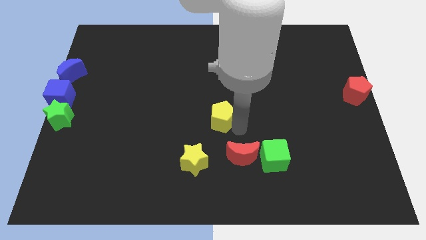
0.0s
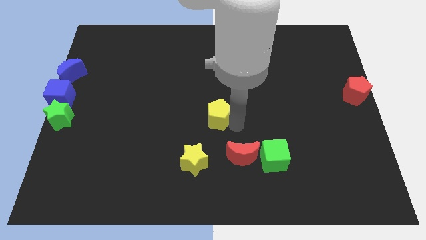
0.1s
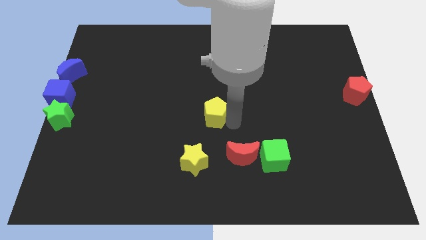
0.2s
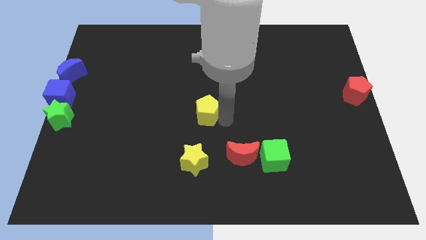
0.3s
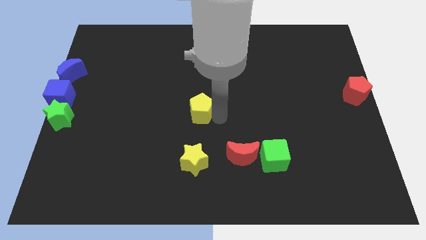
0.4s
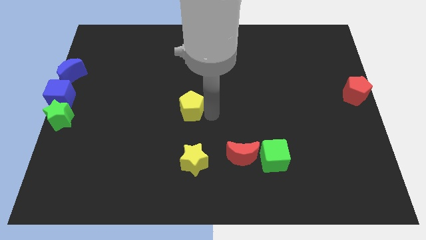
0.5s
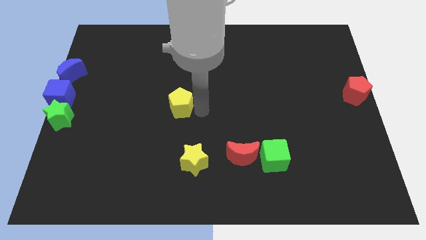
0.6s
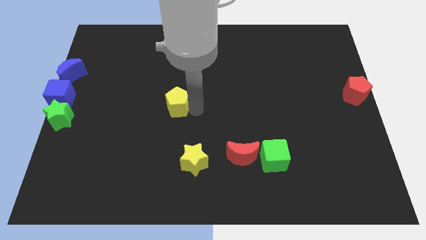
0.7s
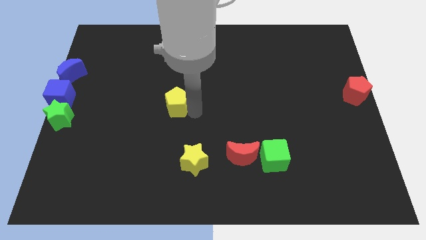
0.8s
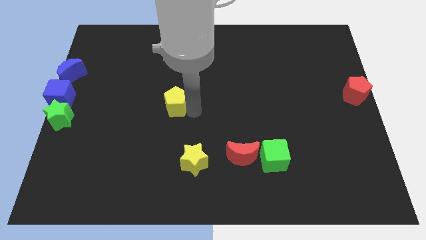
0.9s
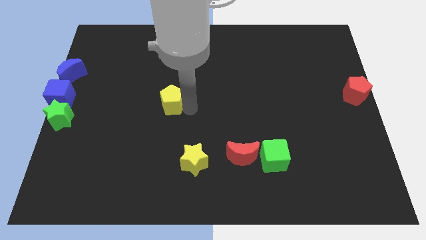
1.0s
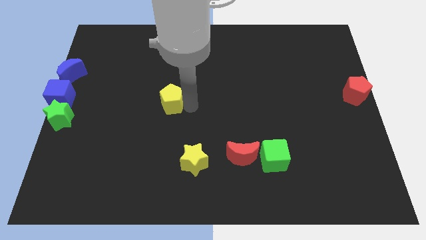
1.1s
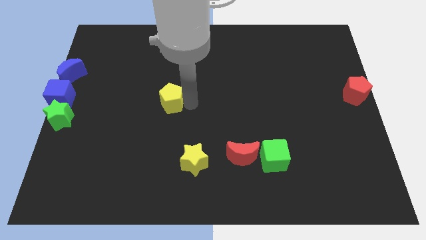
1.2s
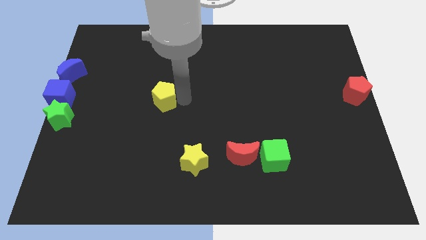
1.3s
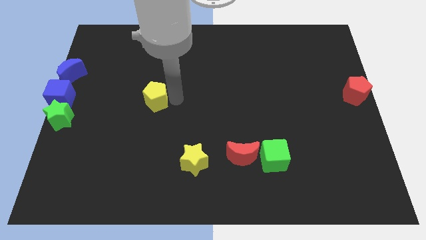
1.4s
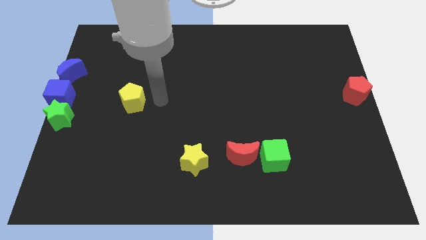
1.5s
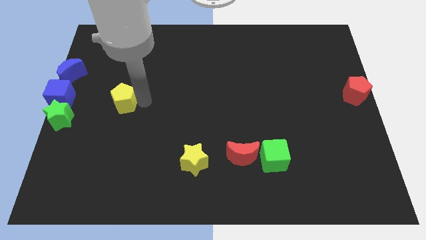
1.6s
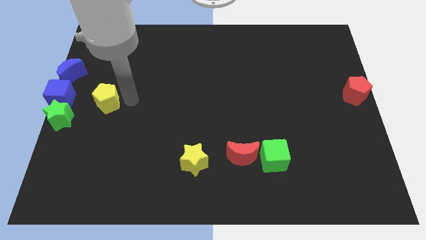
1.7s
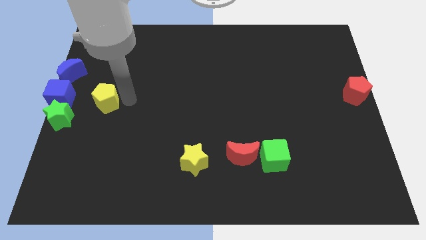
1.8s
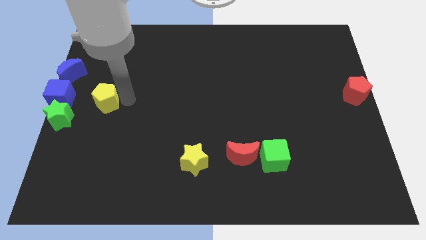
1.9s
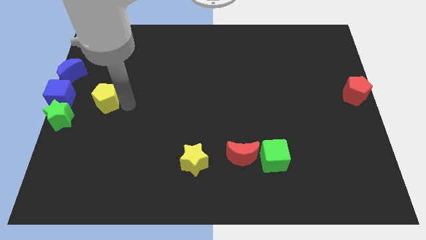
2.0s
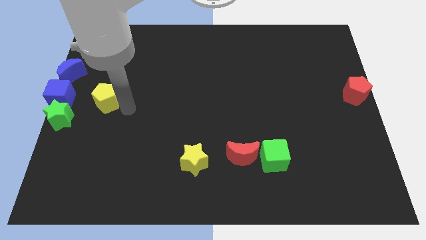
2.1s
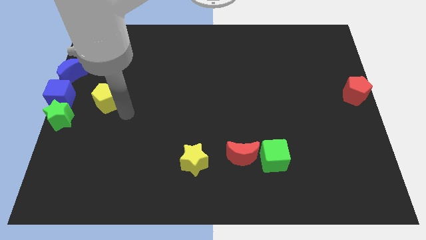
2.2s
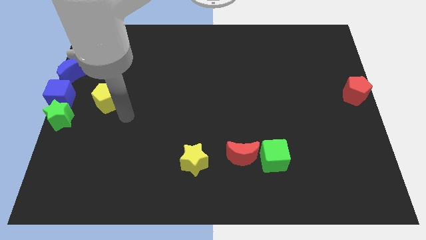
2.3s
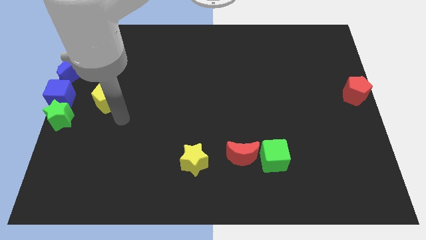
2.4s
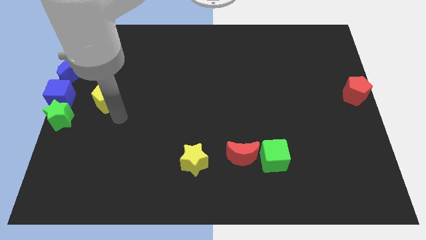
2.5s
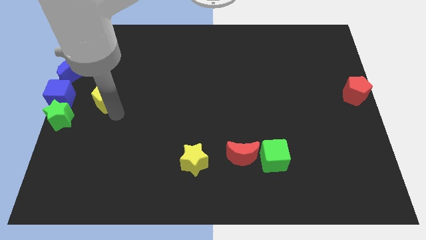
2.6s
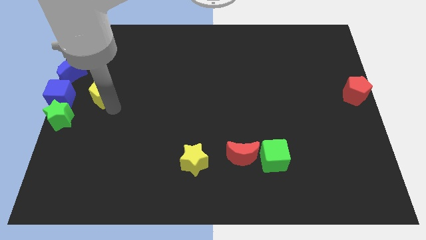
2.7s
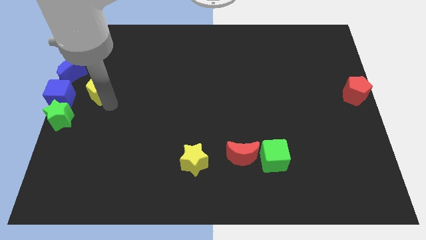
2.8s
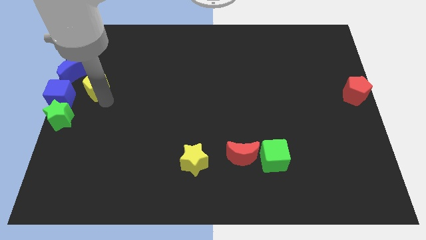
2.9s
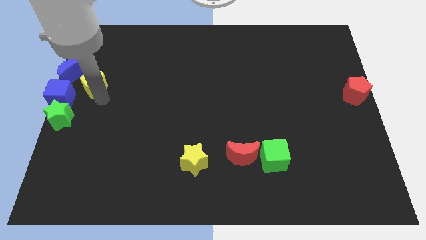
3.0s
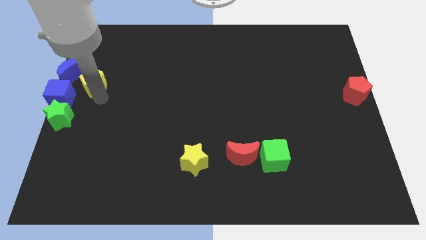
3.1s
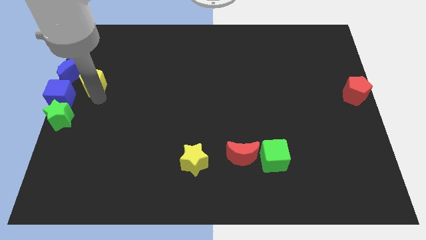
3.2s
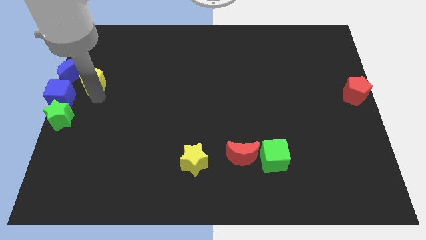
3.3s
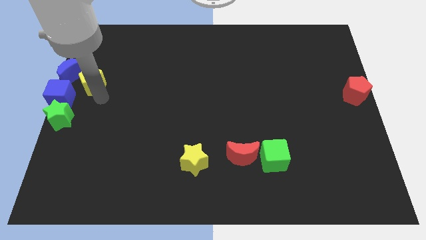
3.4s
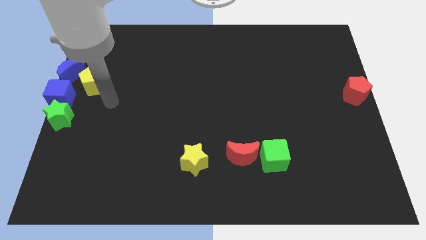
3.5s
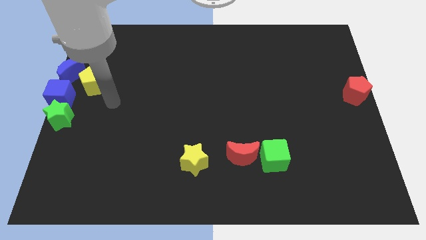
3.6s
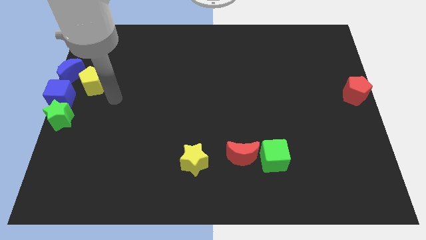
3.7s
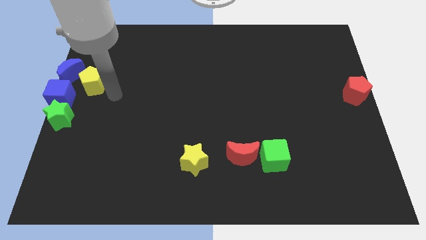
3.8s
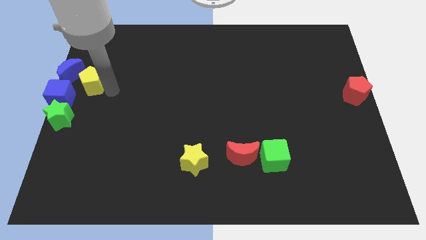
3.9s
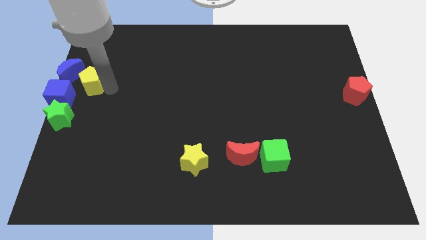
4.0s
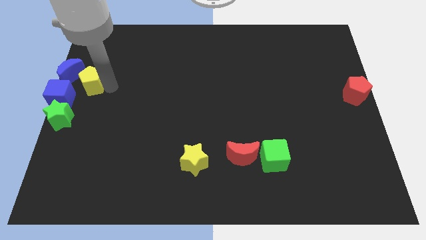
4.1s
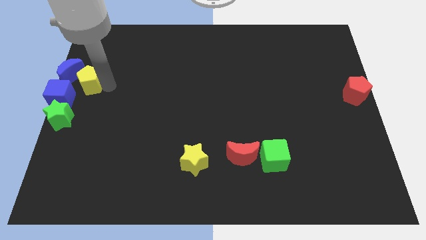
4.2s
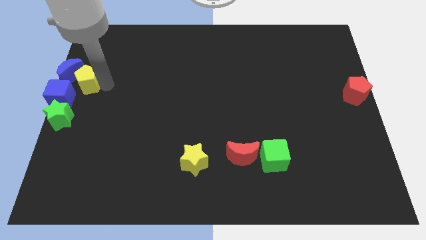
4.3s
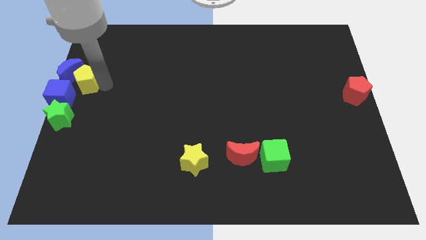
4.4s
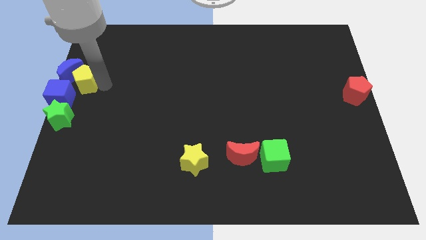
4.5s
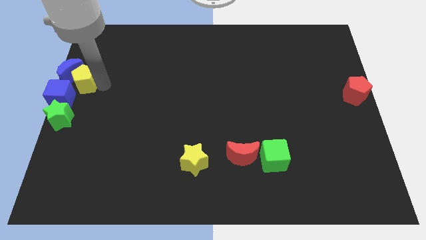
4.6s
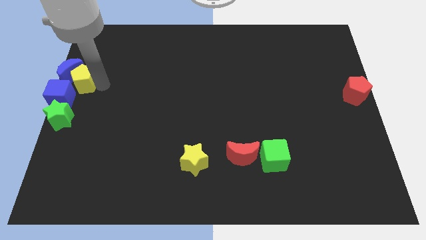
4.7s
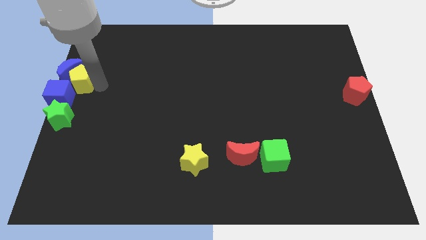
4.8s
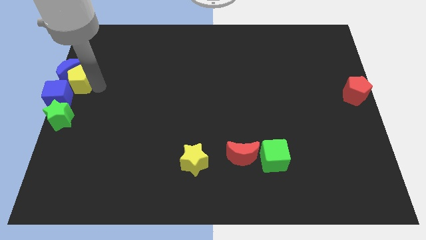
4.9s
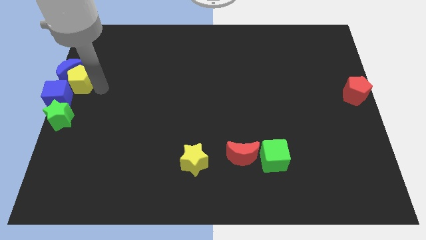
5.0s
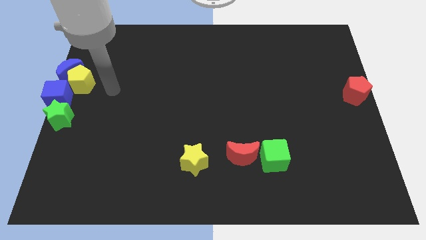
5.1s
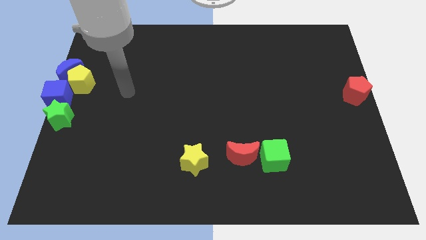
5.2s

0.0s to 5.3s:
push the yellow pentagon into the group of blocks

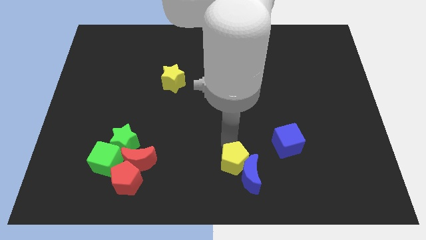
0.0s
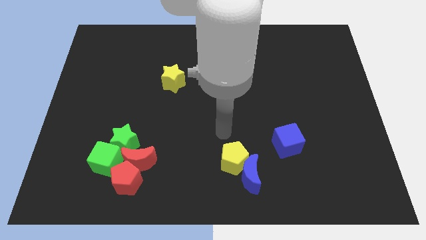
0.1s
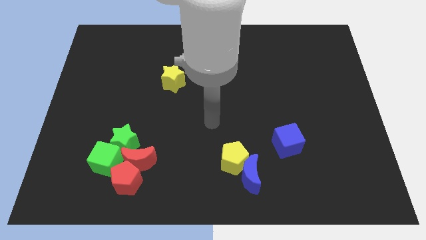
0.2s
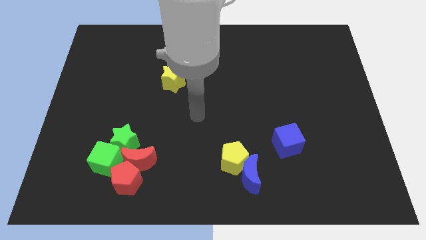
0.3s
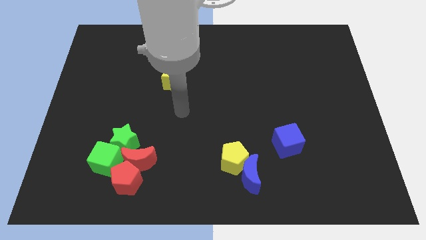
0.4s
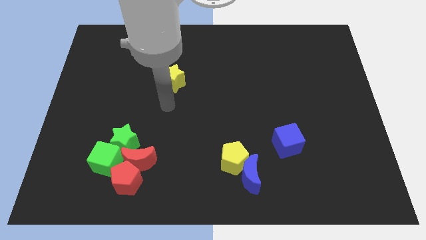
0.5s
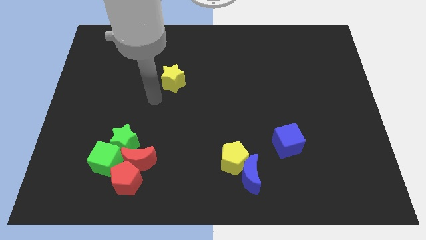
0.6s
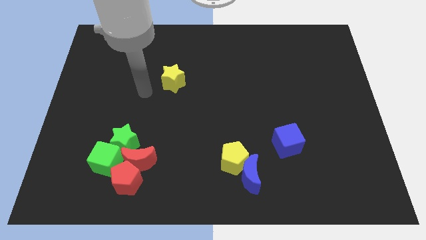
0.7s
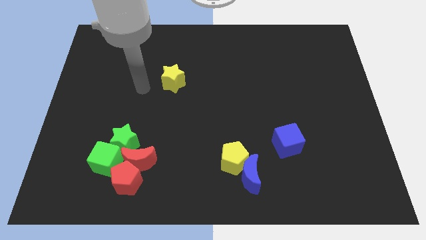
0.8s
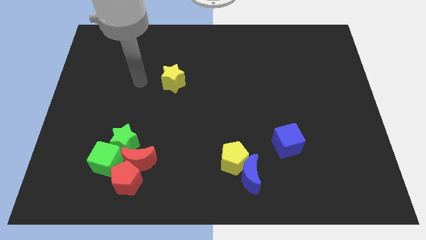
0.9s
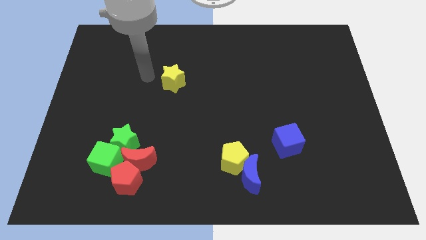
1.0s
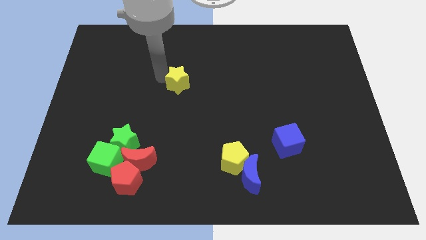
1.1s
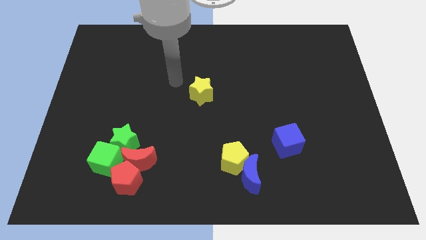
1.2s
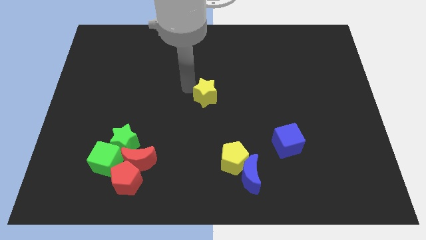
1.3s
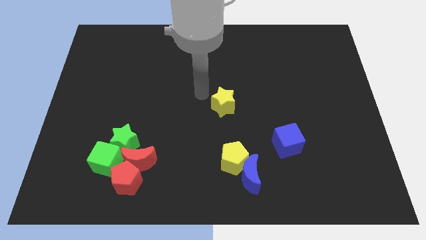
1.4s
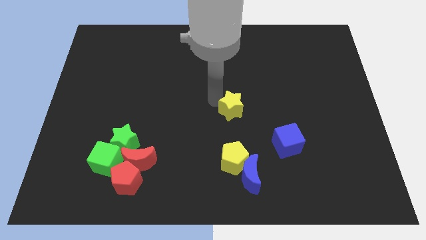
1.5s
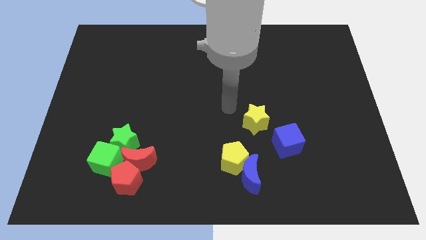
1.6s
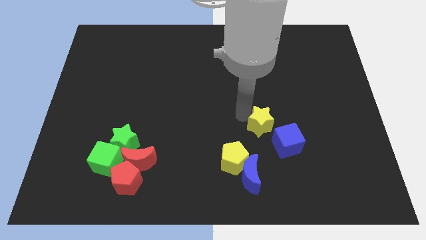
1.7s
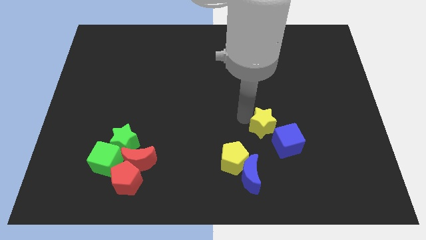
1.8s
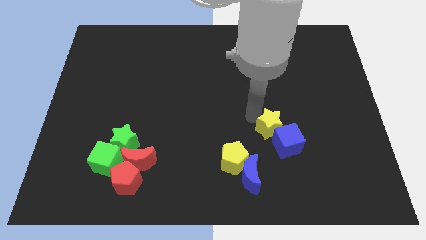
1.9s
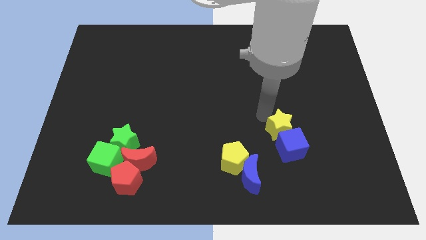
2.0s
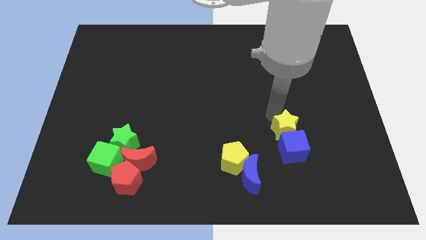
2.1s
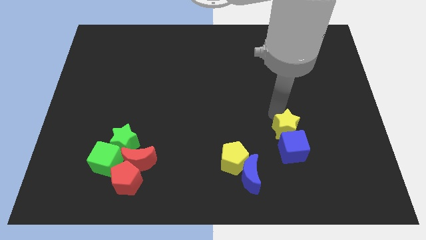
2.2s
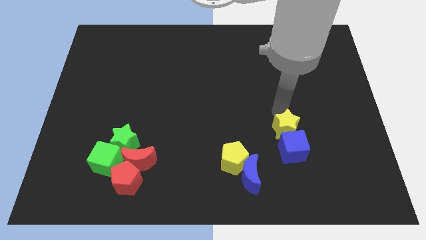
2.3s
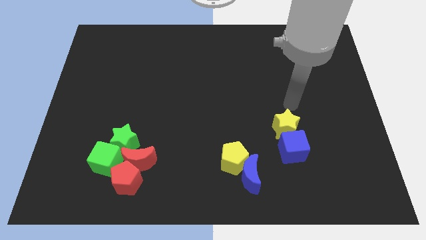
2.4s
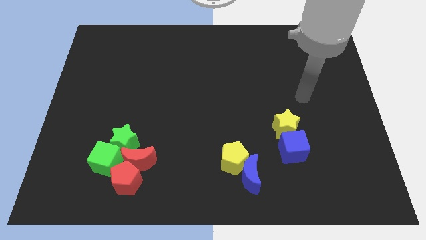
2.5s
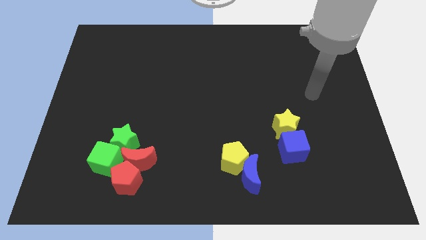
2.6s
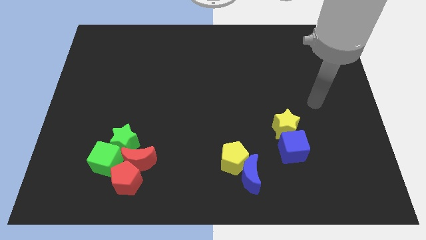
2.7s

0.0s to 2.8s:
place the yellow star above the blue cube

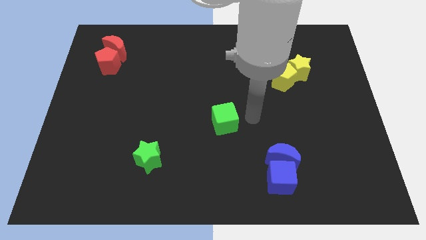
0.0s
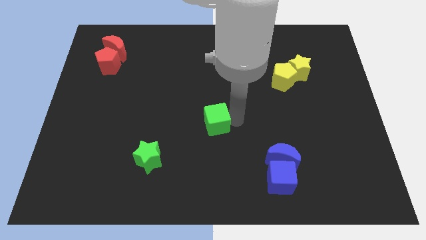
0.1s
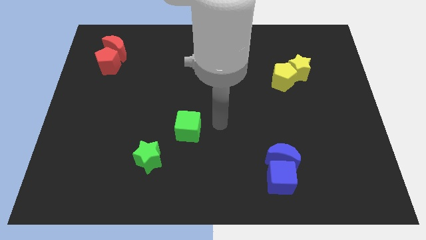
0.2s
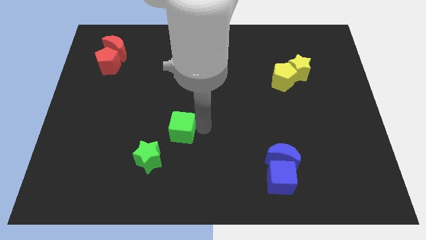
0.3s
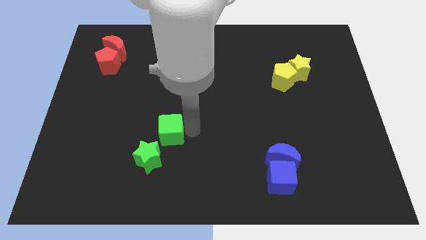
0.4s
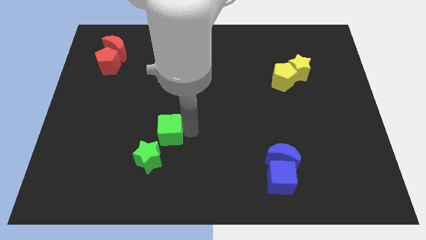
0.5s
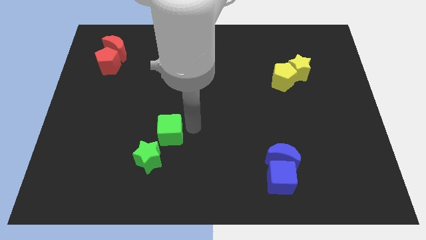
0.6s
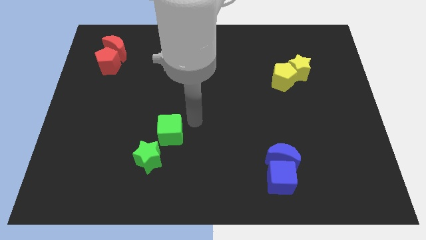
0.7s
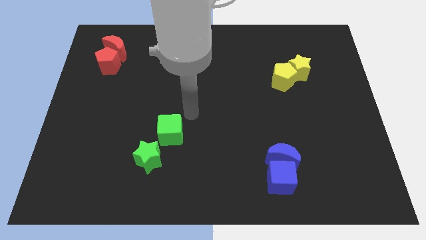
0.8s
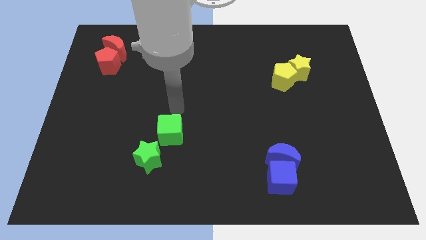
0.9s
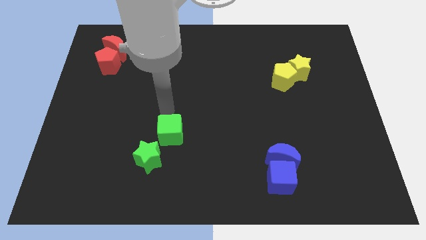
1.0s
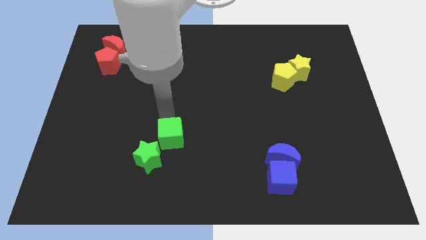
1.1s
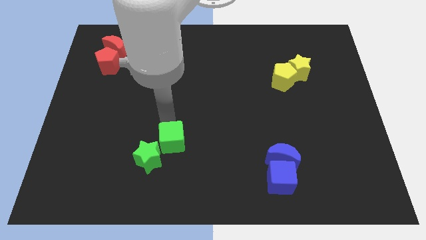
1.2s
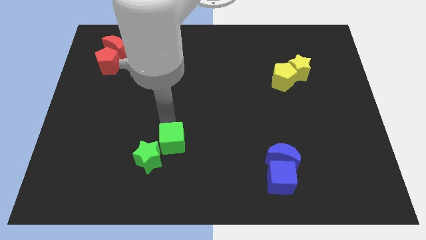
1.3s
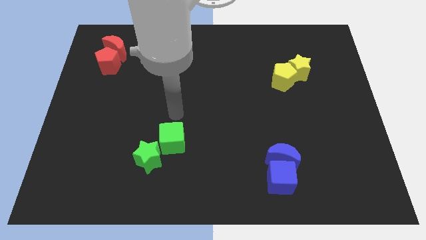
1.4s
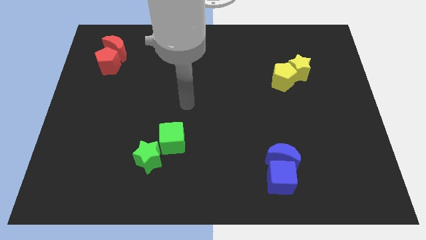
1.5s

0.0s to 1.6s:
move the green cube closer to the green star
